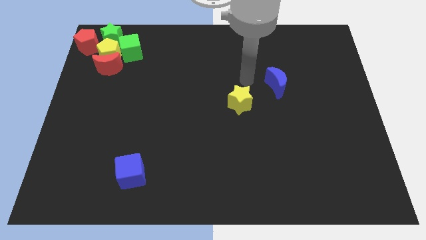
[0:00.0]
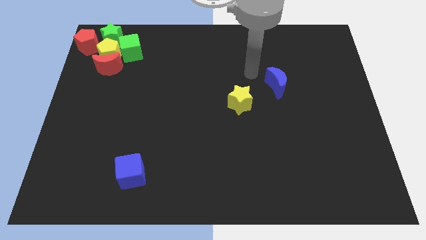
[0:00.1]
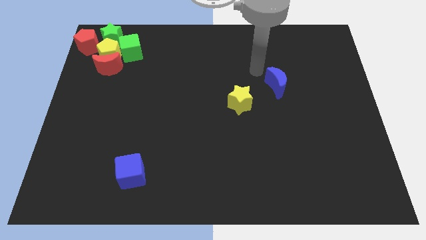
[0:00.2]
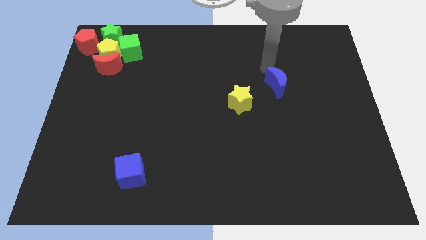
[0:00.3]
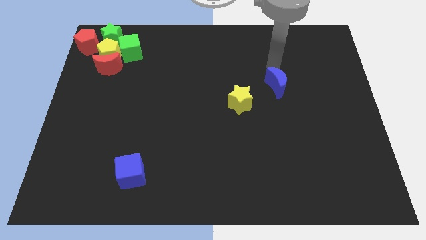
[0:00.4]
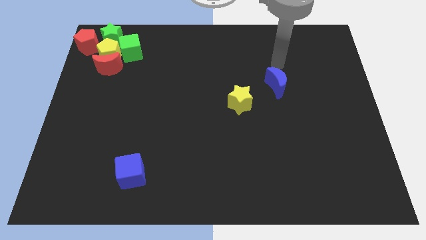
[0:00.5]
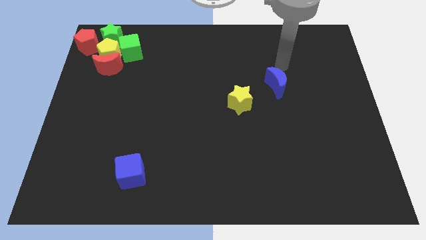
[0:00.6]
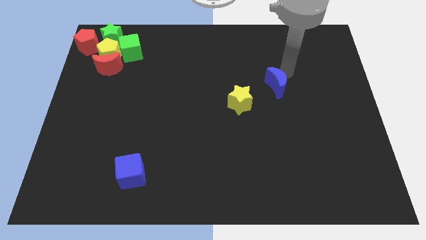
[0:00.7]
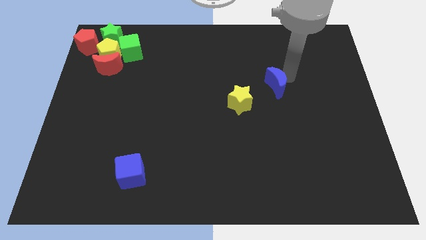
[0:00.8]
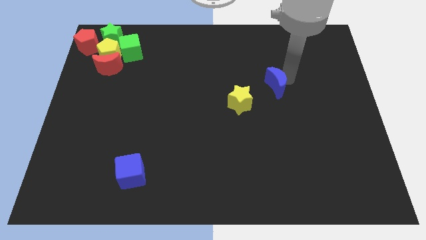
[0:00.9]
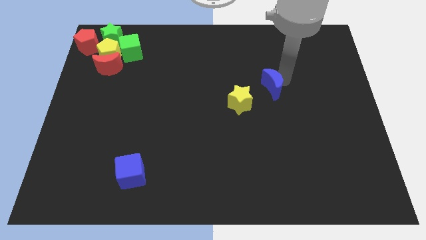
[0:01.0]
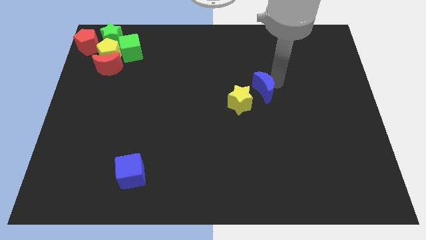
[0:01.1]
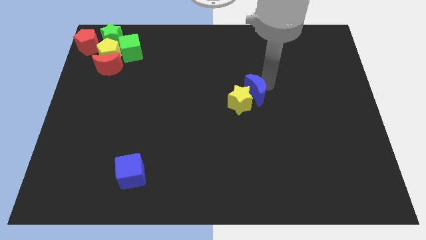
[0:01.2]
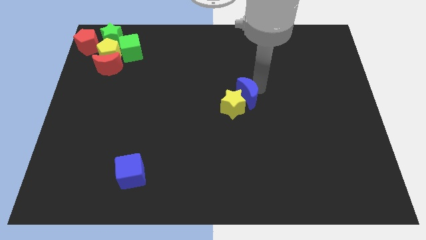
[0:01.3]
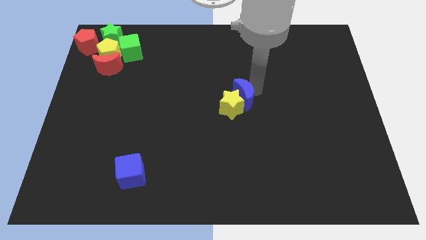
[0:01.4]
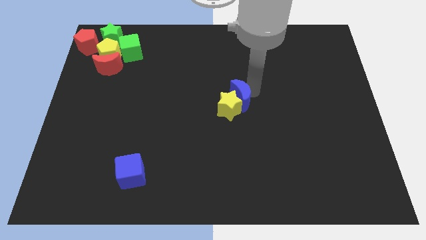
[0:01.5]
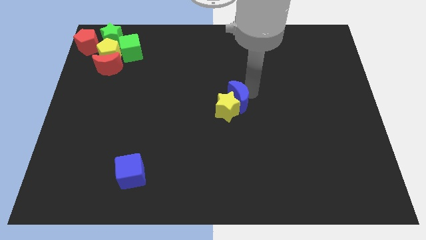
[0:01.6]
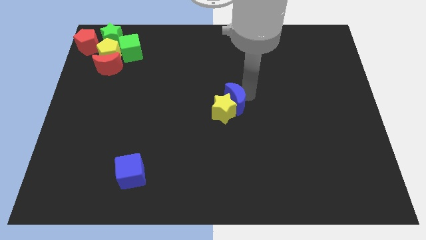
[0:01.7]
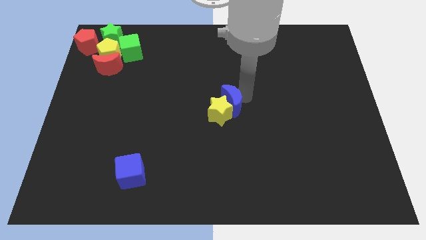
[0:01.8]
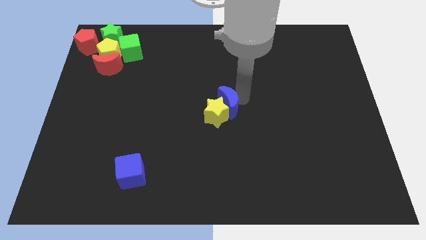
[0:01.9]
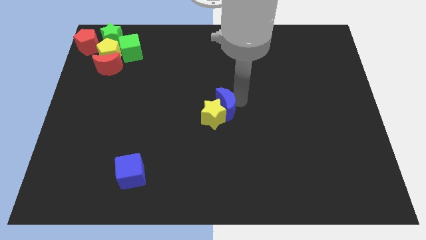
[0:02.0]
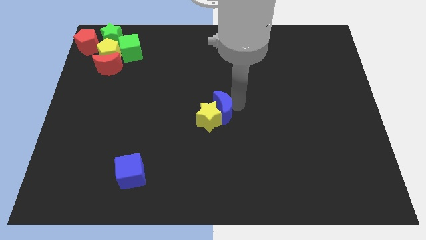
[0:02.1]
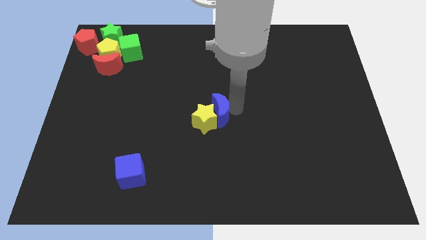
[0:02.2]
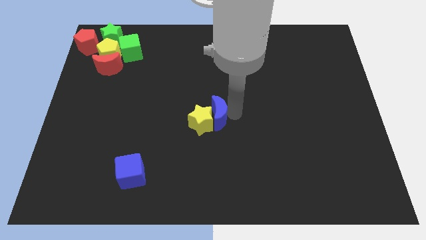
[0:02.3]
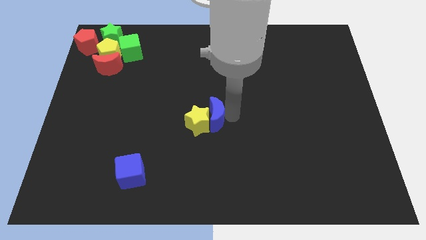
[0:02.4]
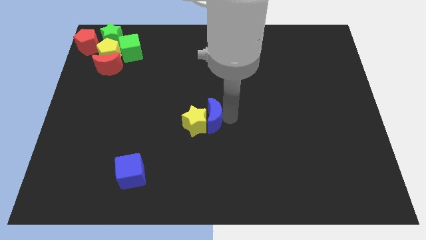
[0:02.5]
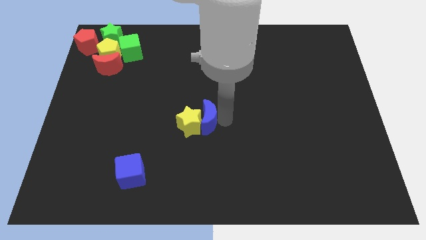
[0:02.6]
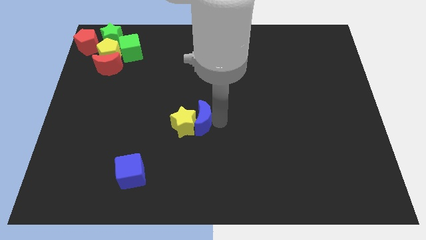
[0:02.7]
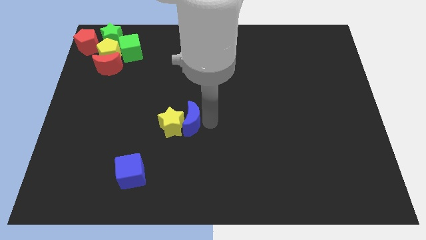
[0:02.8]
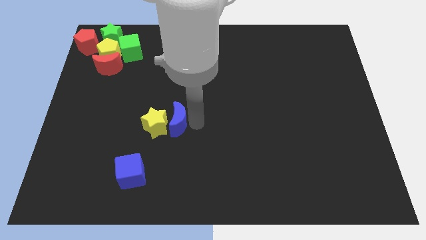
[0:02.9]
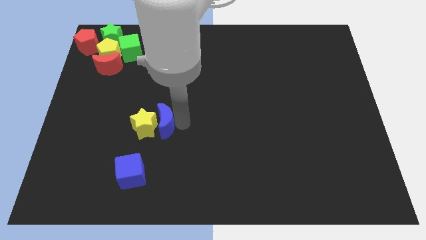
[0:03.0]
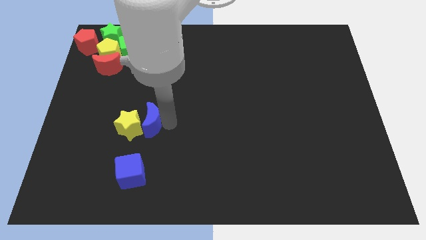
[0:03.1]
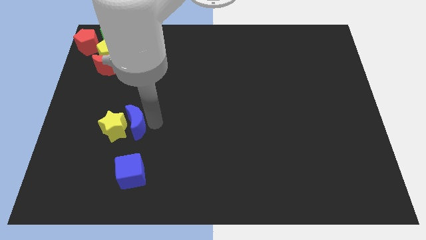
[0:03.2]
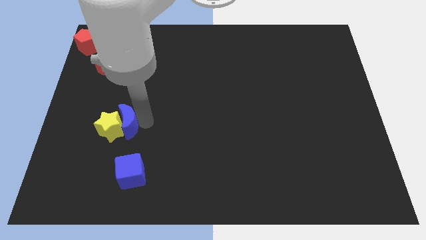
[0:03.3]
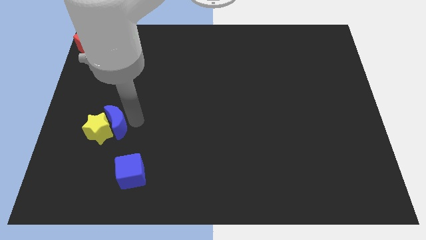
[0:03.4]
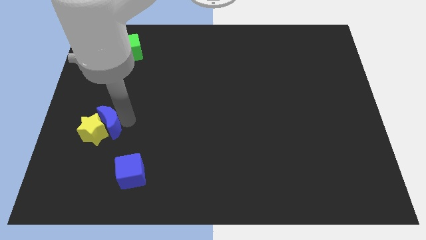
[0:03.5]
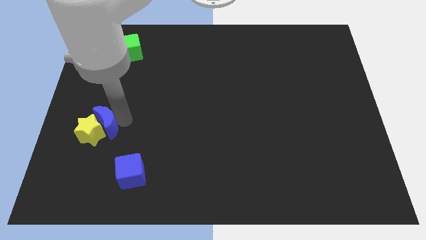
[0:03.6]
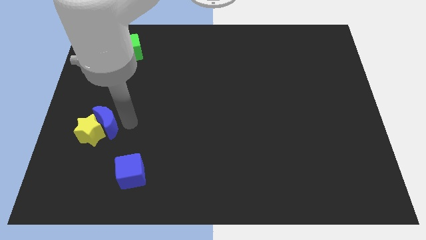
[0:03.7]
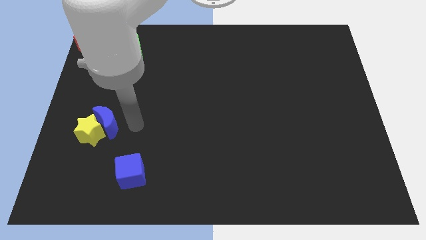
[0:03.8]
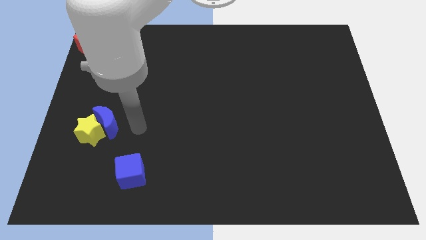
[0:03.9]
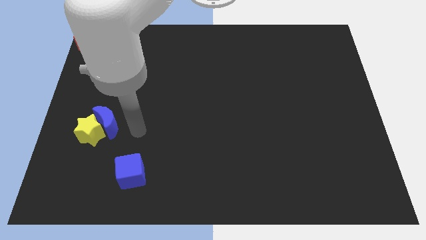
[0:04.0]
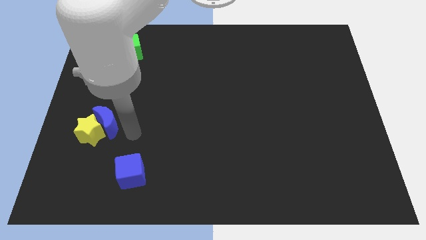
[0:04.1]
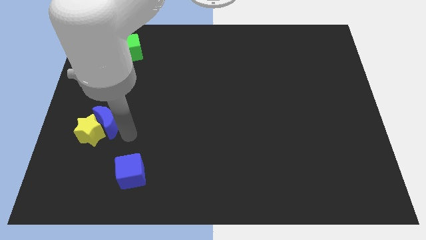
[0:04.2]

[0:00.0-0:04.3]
push the blue crescent and yellow star towards the bottom left

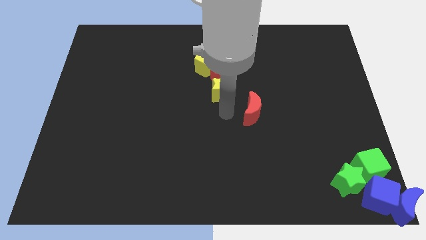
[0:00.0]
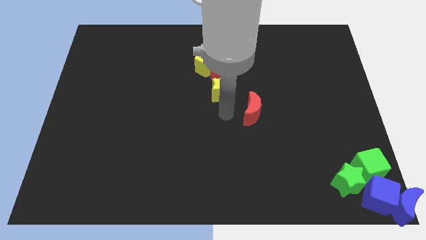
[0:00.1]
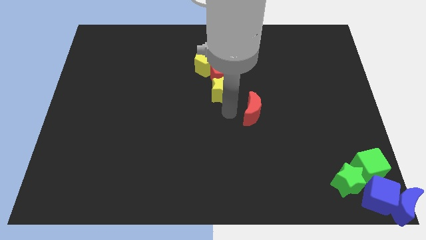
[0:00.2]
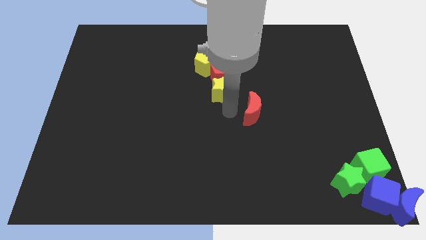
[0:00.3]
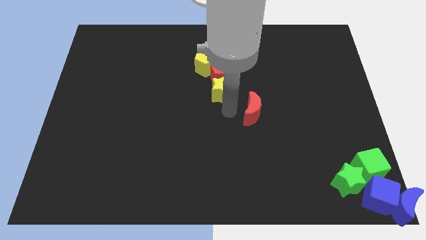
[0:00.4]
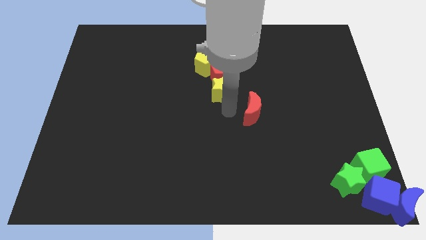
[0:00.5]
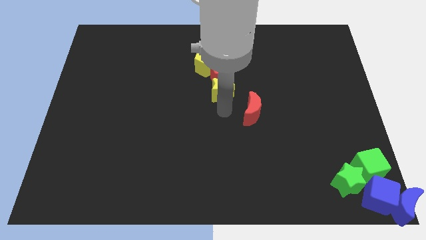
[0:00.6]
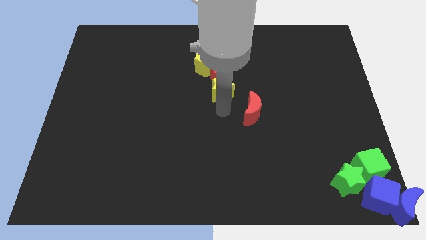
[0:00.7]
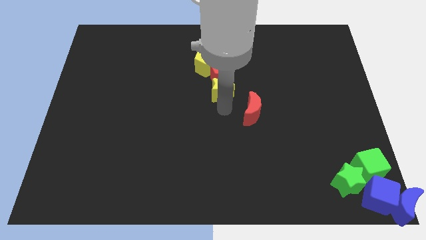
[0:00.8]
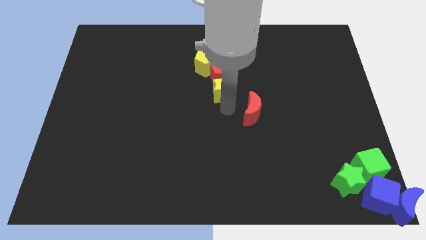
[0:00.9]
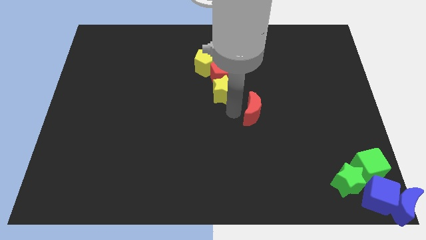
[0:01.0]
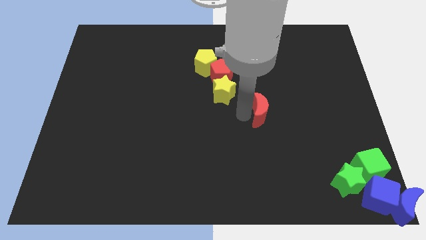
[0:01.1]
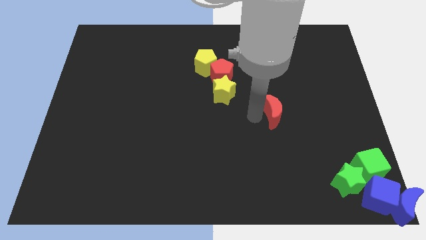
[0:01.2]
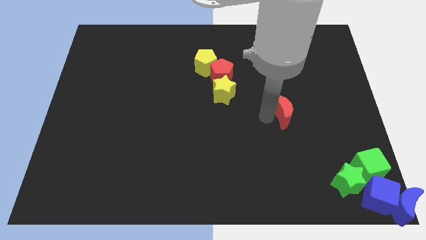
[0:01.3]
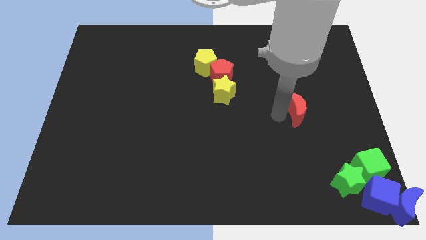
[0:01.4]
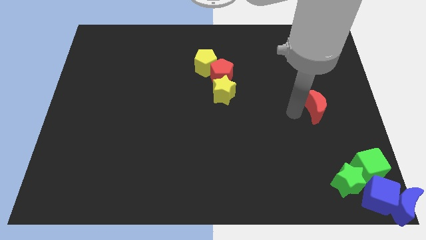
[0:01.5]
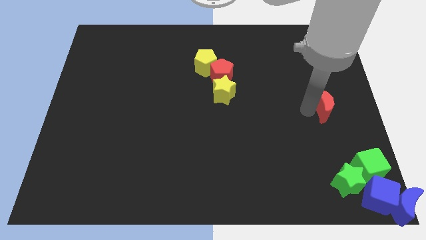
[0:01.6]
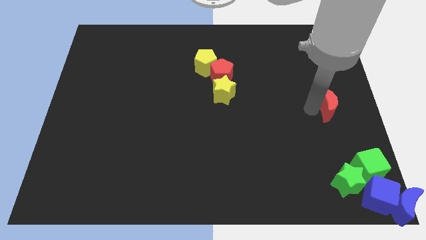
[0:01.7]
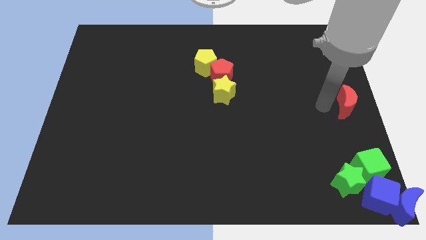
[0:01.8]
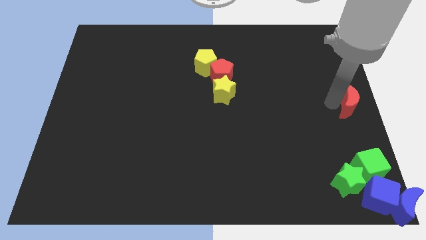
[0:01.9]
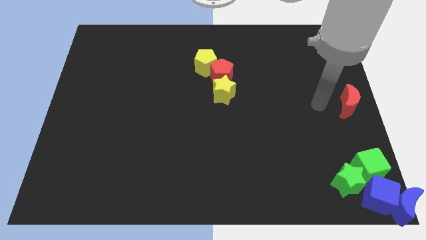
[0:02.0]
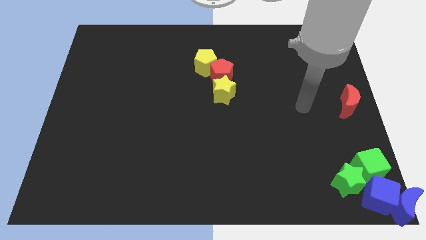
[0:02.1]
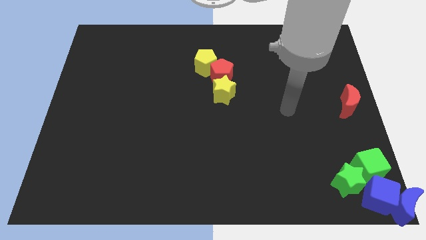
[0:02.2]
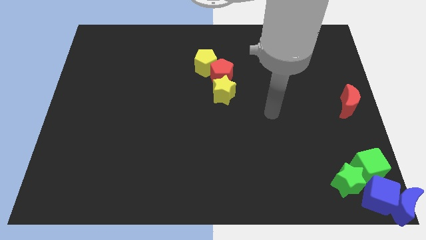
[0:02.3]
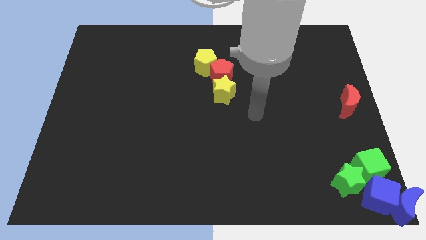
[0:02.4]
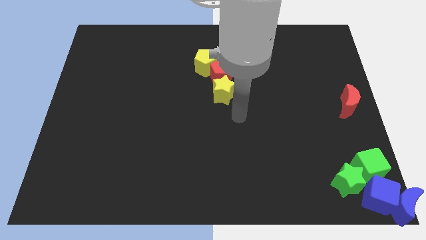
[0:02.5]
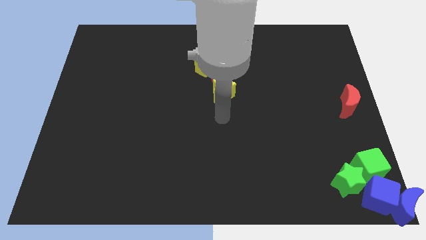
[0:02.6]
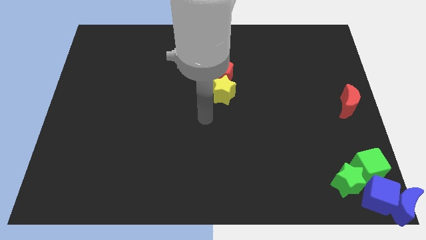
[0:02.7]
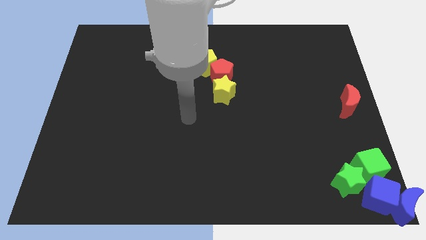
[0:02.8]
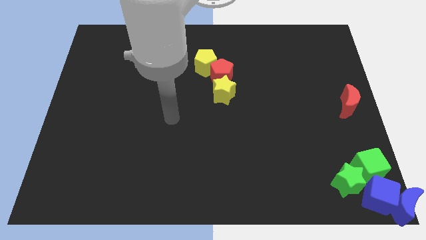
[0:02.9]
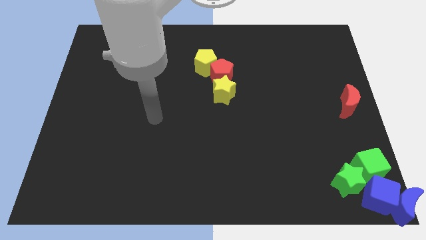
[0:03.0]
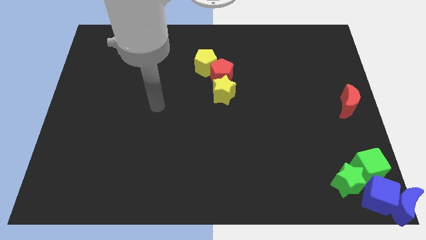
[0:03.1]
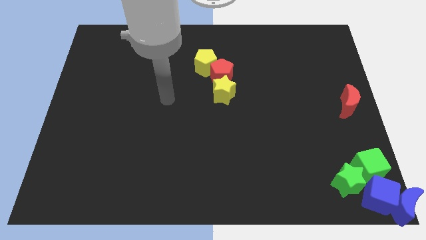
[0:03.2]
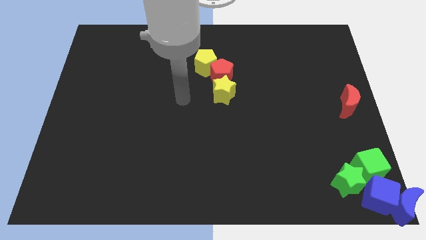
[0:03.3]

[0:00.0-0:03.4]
place red crescent to the center right

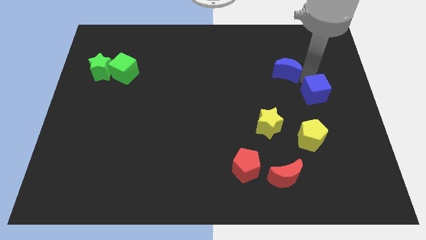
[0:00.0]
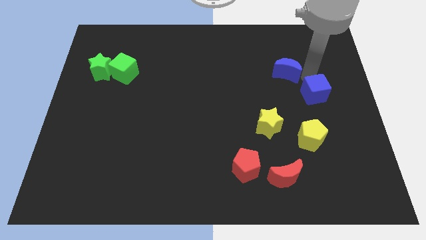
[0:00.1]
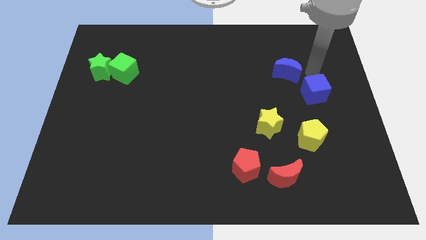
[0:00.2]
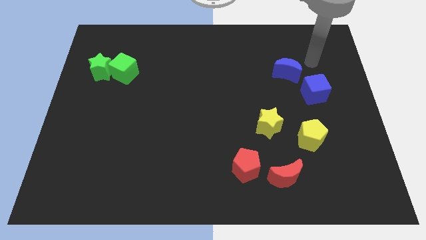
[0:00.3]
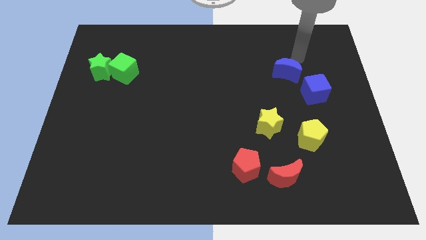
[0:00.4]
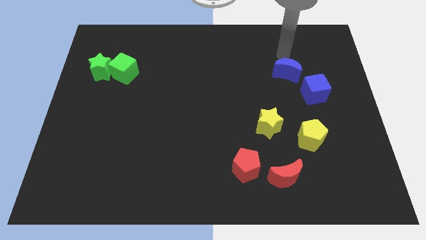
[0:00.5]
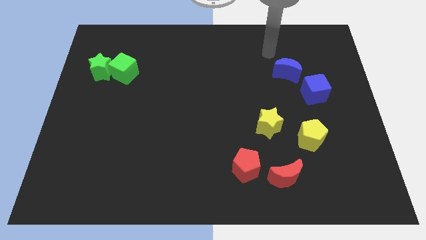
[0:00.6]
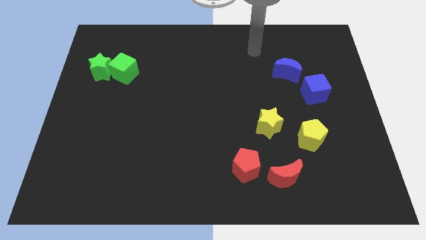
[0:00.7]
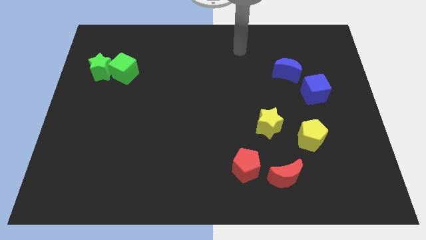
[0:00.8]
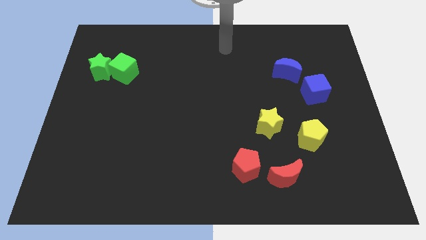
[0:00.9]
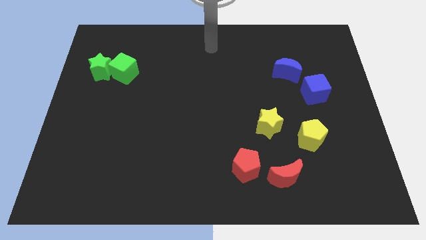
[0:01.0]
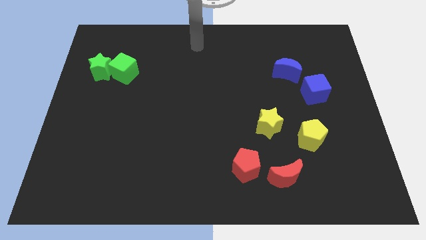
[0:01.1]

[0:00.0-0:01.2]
move your arm away from the blue moon
